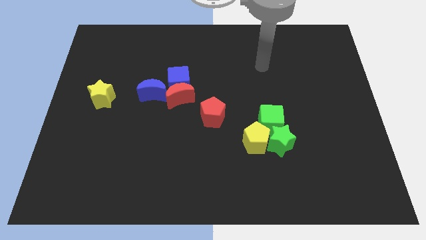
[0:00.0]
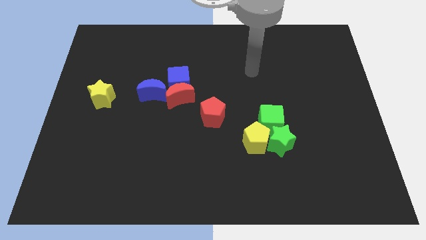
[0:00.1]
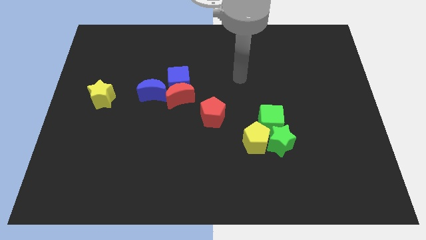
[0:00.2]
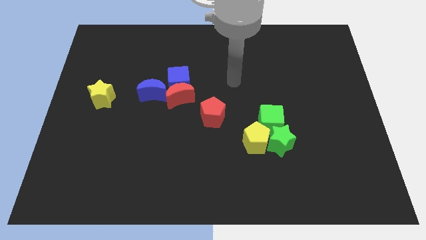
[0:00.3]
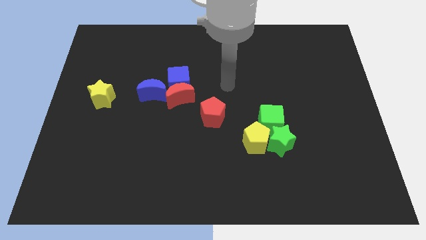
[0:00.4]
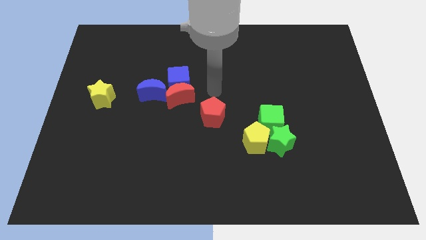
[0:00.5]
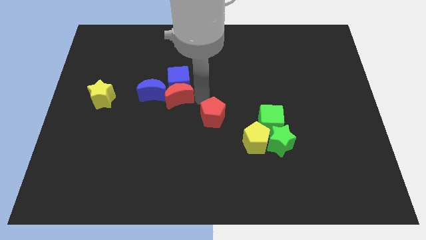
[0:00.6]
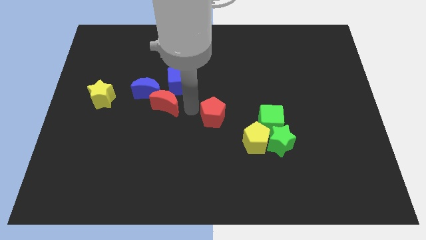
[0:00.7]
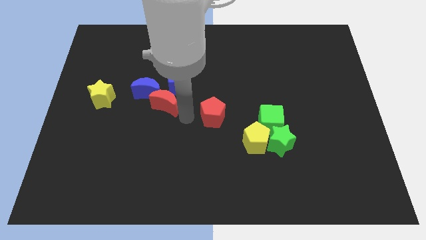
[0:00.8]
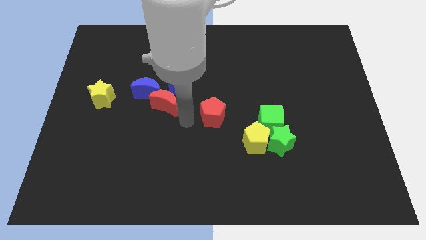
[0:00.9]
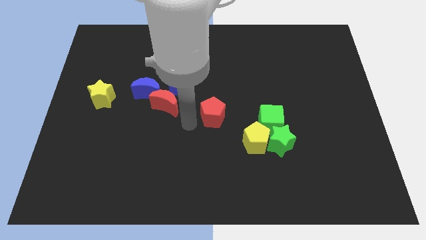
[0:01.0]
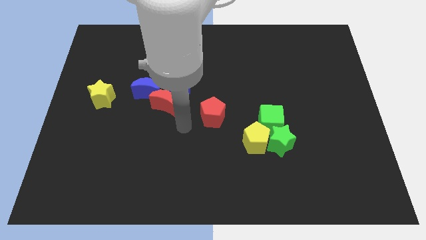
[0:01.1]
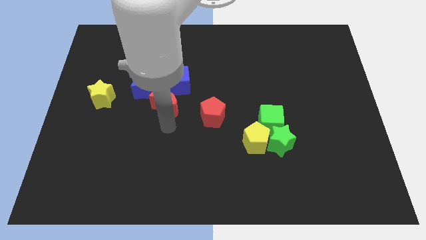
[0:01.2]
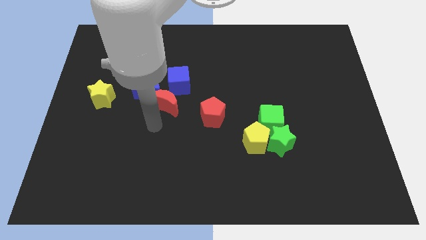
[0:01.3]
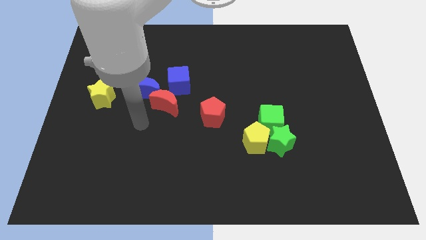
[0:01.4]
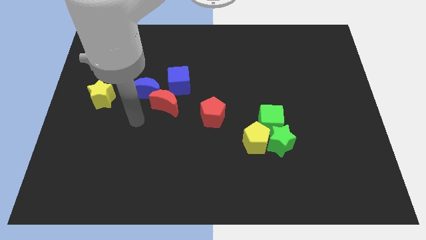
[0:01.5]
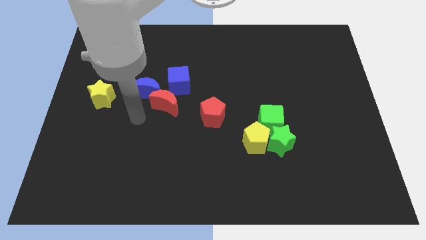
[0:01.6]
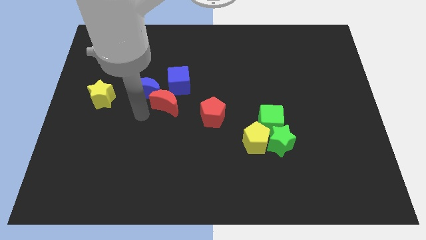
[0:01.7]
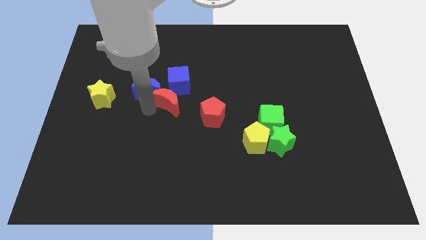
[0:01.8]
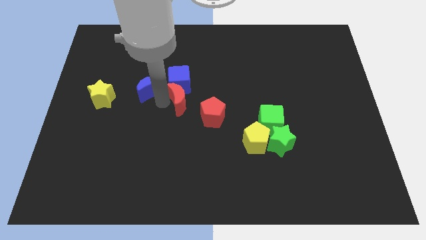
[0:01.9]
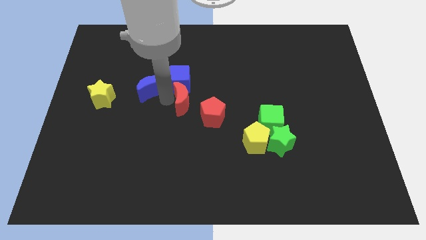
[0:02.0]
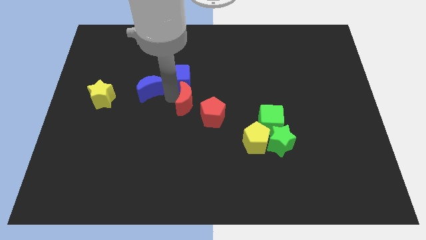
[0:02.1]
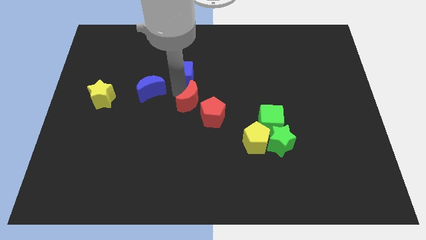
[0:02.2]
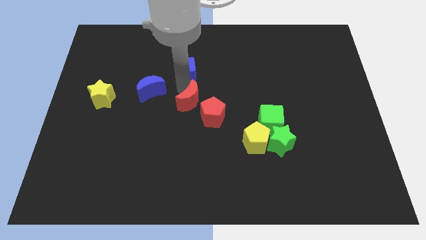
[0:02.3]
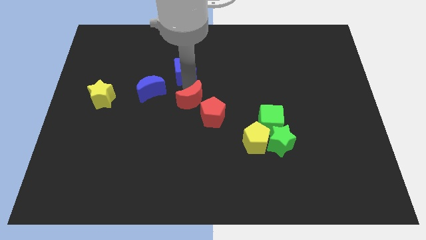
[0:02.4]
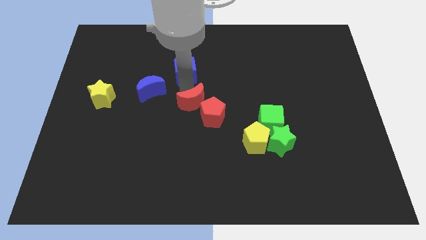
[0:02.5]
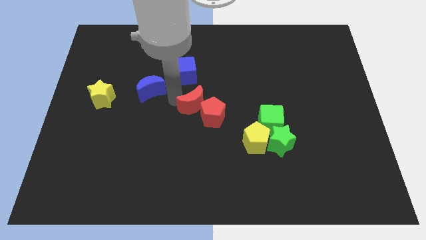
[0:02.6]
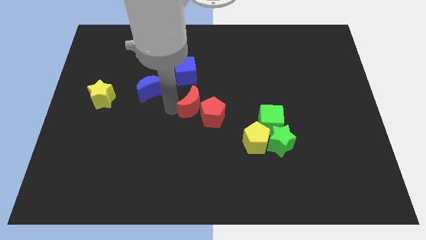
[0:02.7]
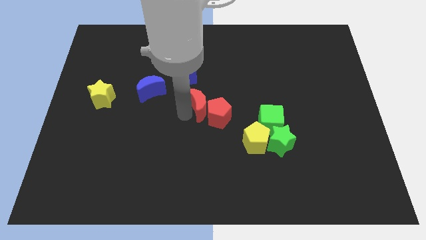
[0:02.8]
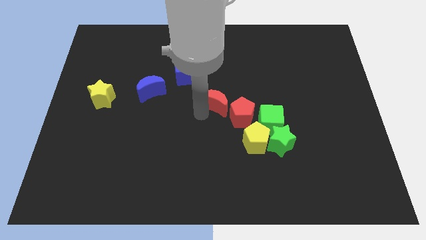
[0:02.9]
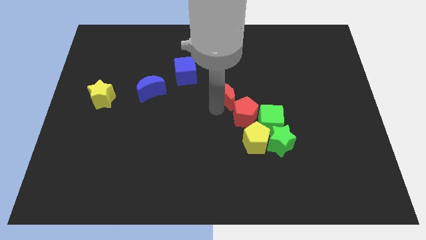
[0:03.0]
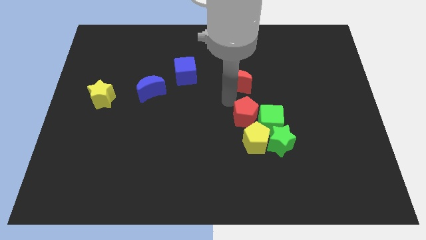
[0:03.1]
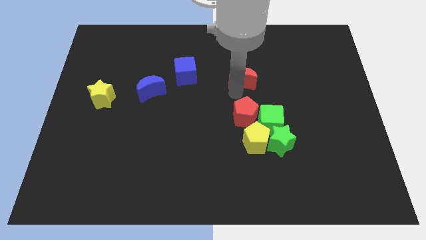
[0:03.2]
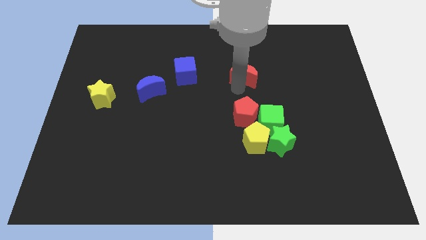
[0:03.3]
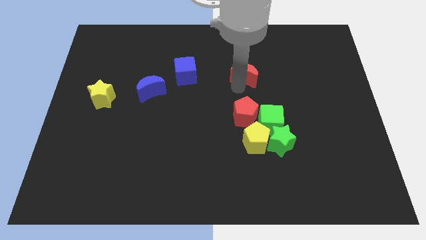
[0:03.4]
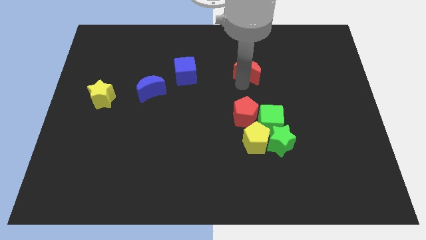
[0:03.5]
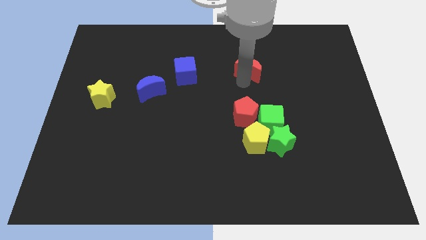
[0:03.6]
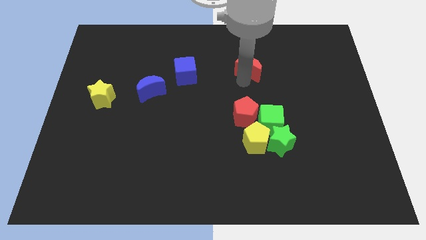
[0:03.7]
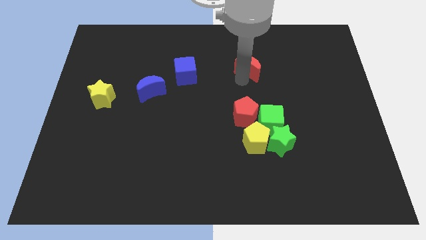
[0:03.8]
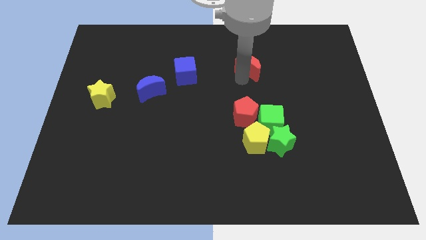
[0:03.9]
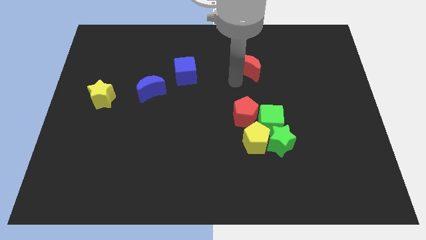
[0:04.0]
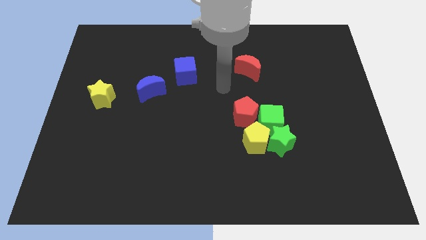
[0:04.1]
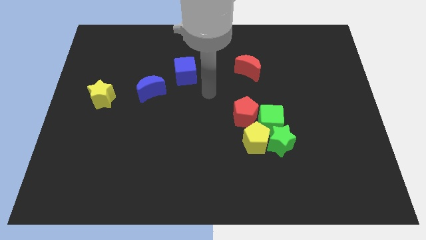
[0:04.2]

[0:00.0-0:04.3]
push the red moon to the horizontal right of the blue cube

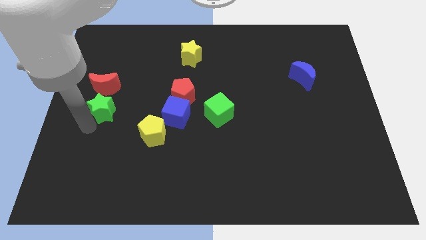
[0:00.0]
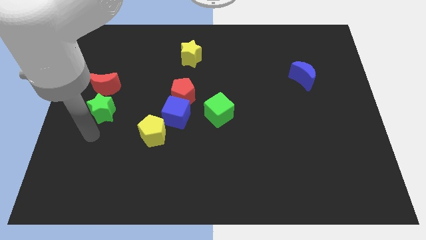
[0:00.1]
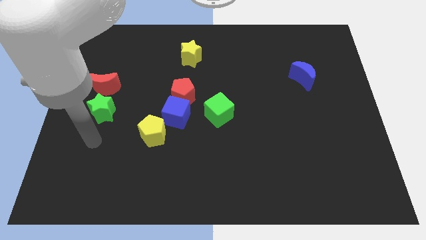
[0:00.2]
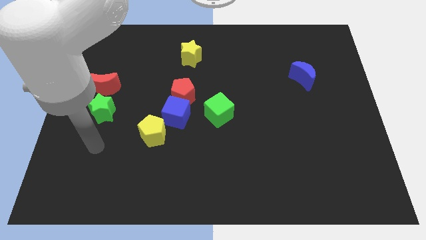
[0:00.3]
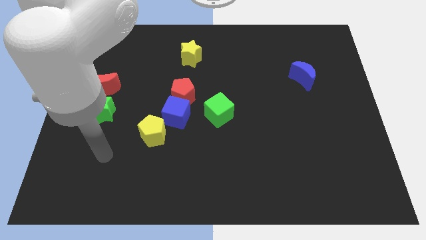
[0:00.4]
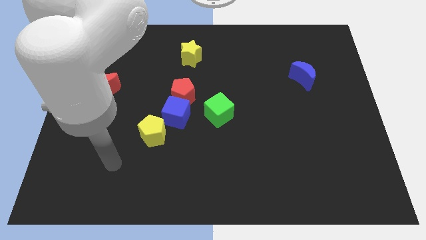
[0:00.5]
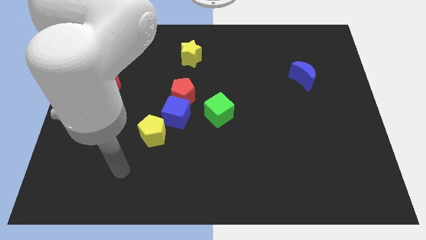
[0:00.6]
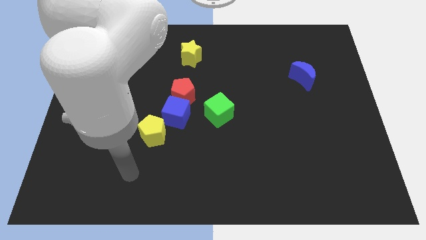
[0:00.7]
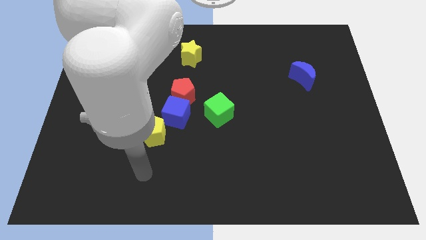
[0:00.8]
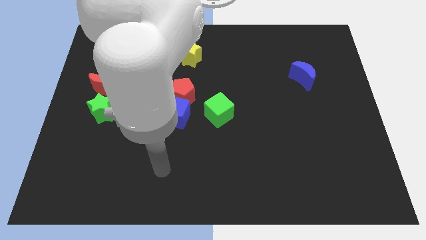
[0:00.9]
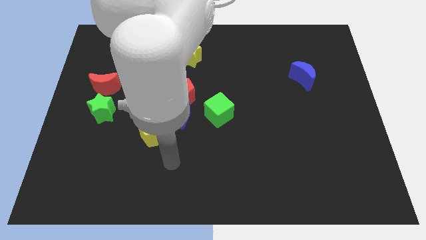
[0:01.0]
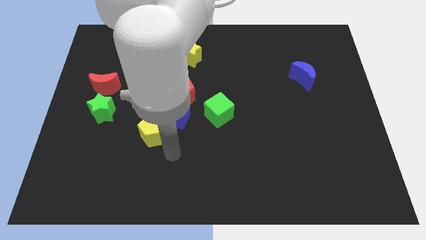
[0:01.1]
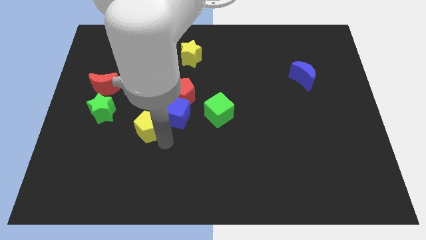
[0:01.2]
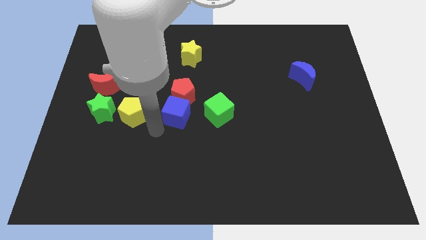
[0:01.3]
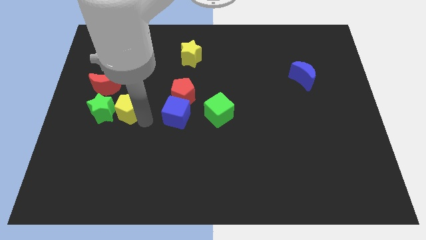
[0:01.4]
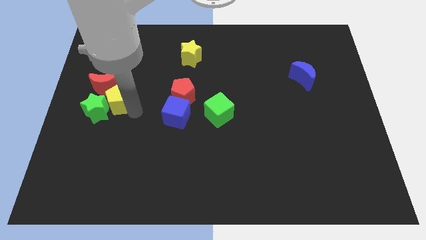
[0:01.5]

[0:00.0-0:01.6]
push the yellow pentagon right to the green star

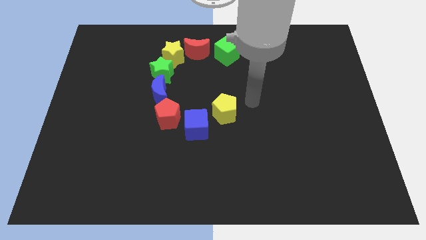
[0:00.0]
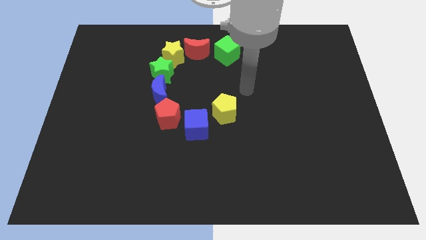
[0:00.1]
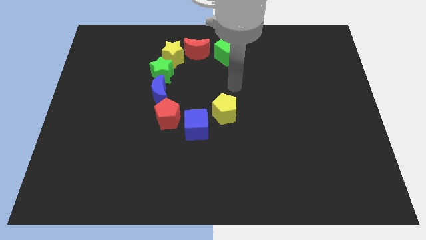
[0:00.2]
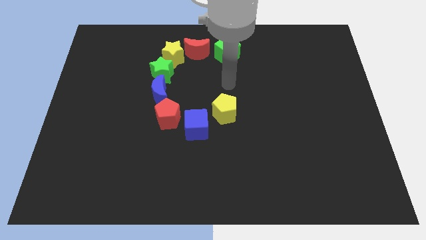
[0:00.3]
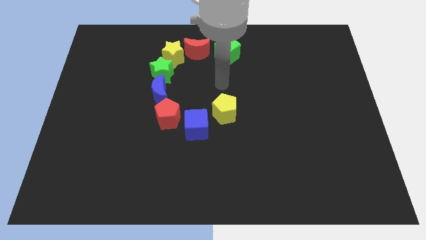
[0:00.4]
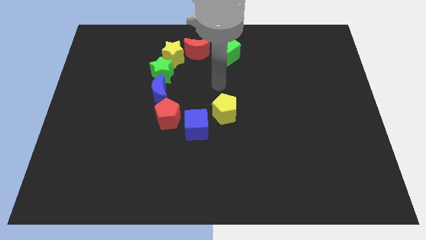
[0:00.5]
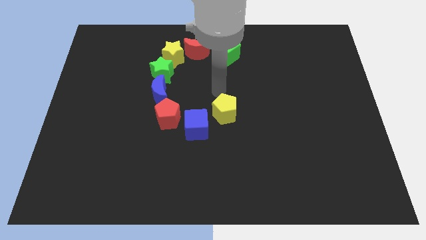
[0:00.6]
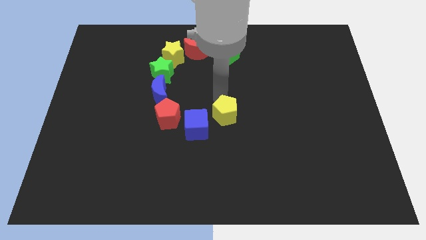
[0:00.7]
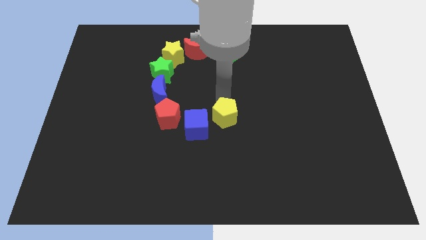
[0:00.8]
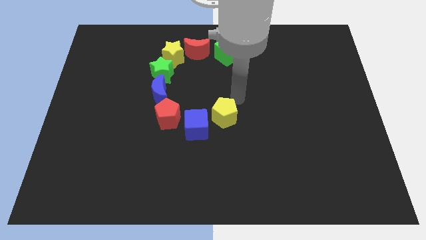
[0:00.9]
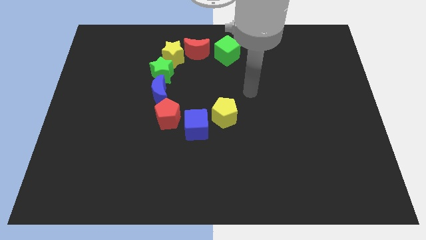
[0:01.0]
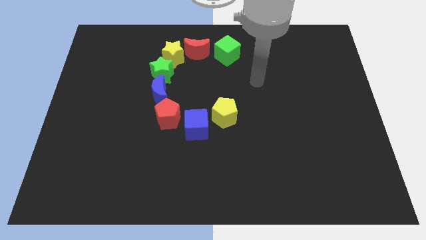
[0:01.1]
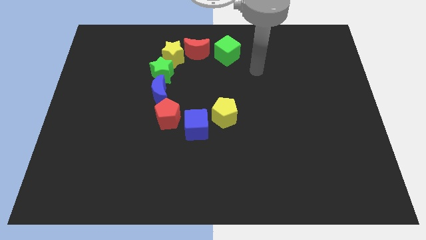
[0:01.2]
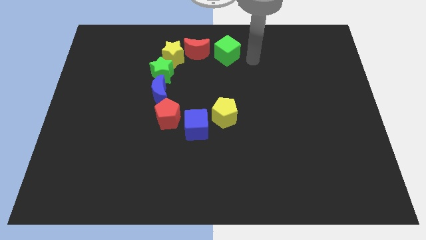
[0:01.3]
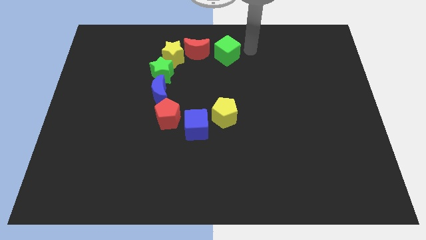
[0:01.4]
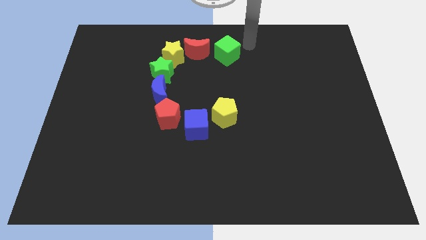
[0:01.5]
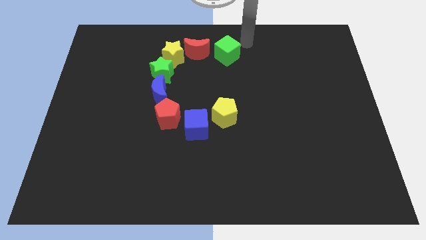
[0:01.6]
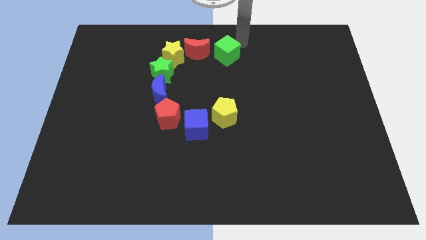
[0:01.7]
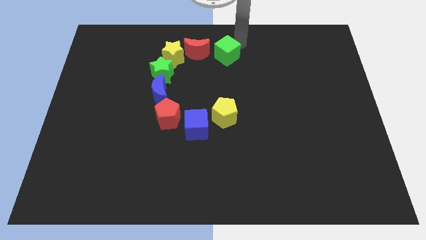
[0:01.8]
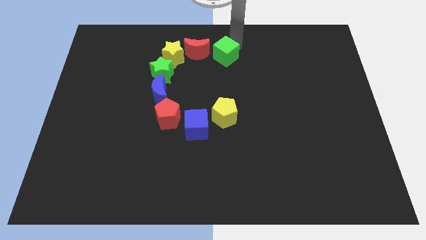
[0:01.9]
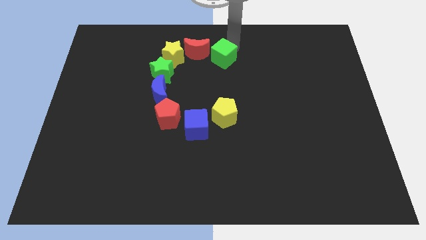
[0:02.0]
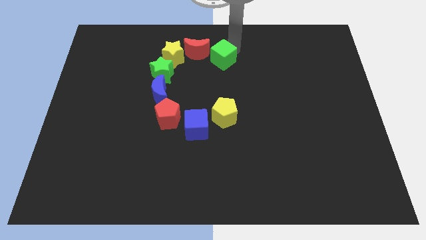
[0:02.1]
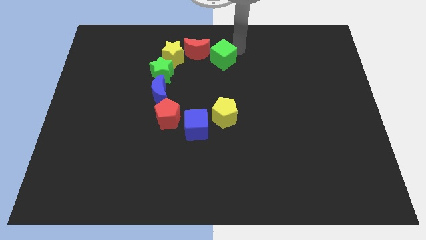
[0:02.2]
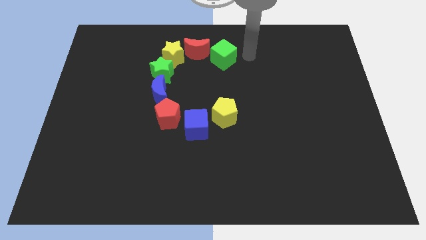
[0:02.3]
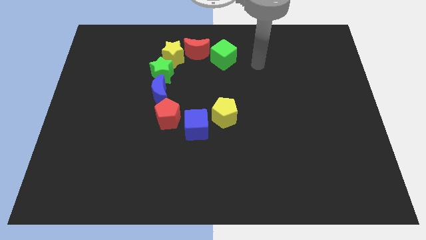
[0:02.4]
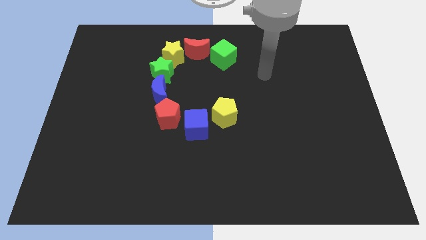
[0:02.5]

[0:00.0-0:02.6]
move the yellow pentagon and the green cube slightly to the down

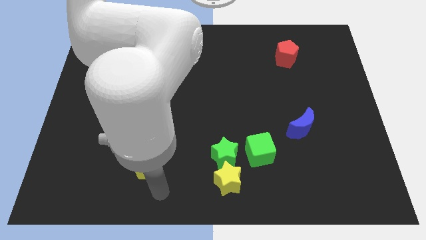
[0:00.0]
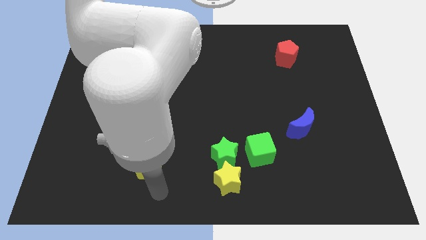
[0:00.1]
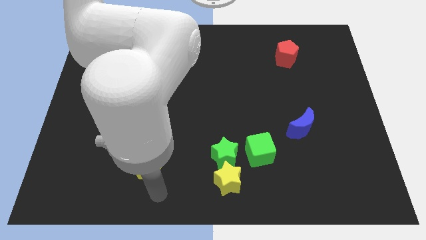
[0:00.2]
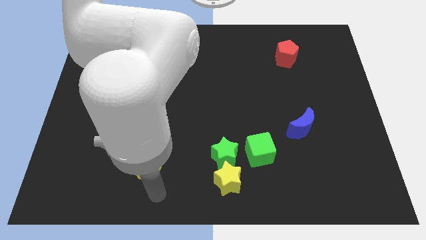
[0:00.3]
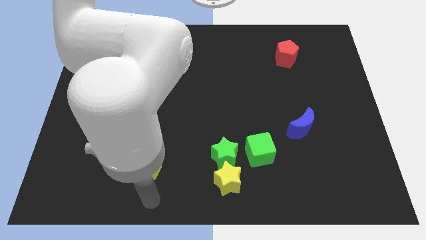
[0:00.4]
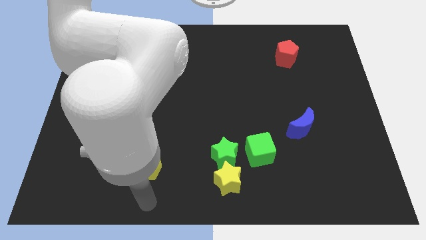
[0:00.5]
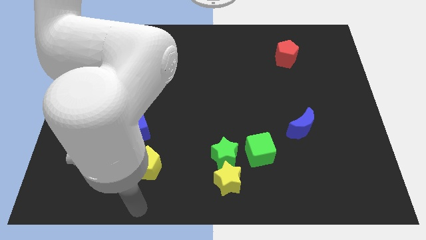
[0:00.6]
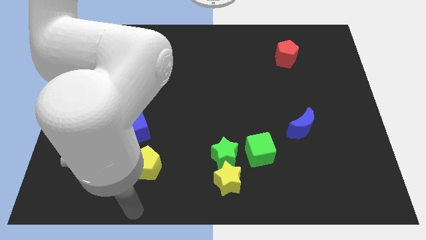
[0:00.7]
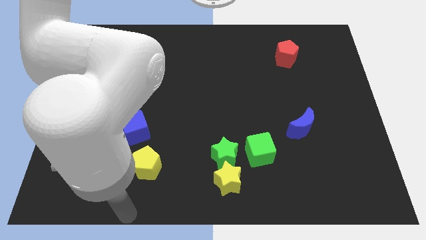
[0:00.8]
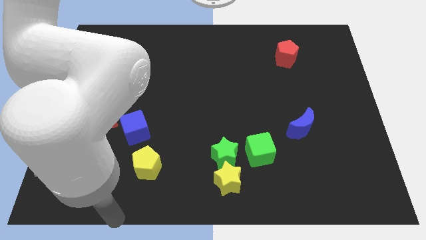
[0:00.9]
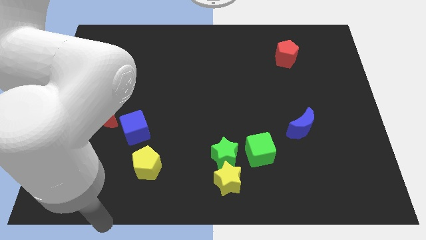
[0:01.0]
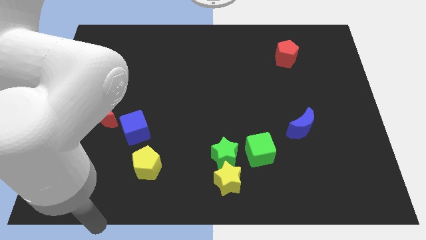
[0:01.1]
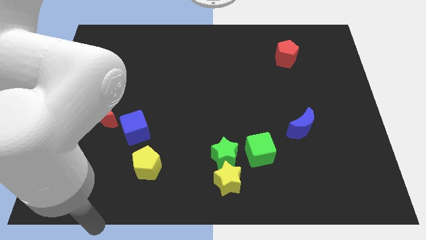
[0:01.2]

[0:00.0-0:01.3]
move your hand to the bottom left of the board
